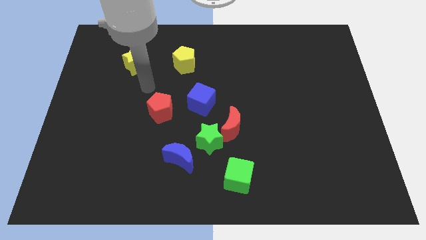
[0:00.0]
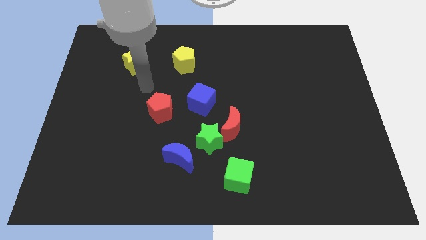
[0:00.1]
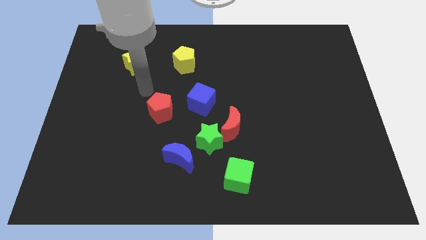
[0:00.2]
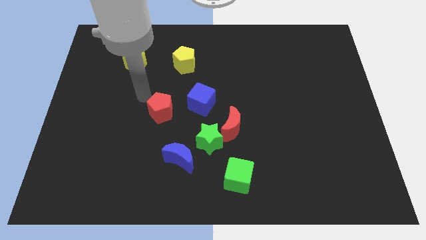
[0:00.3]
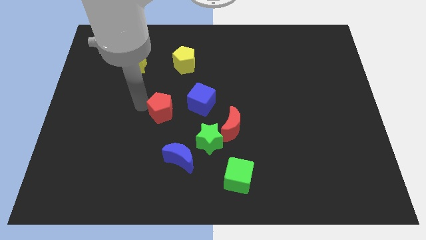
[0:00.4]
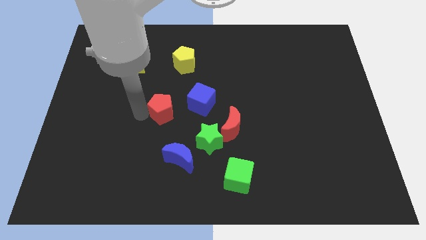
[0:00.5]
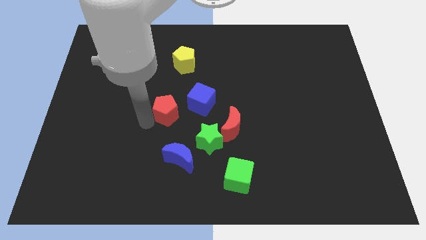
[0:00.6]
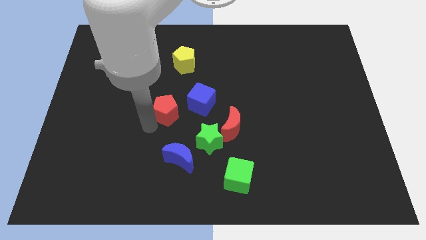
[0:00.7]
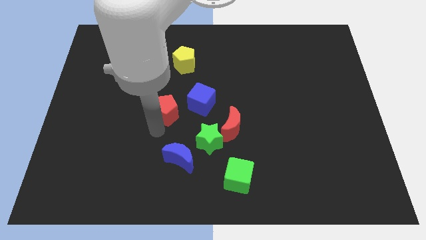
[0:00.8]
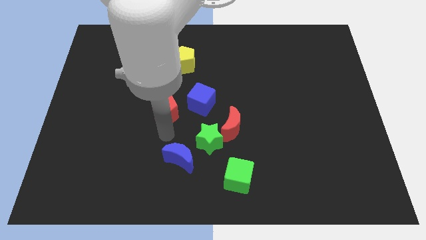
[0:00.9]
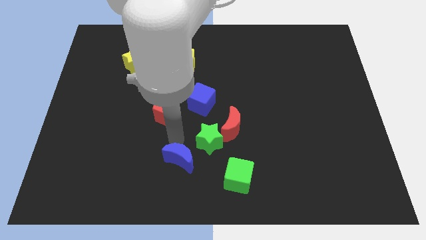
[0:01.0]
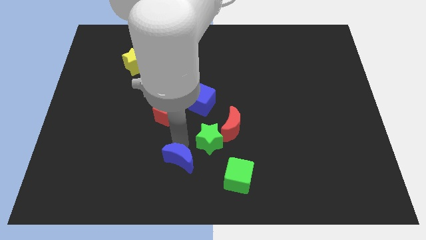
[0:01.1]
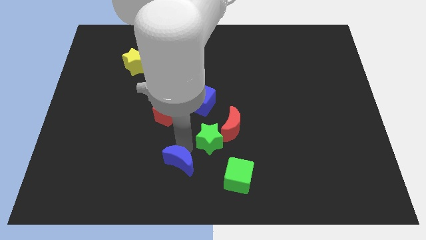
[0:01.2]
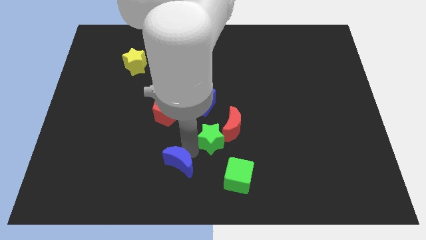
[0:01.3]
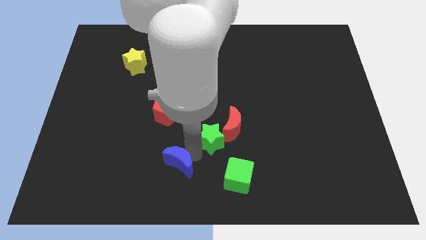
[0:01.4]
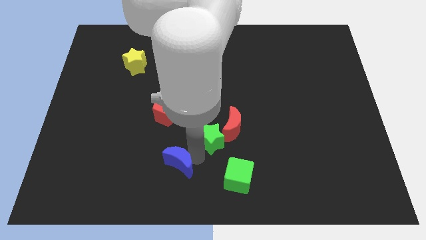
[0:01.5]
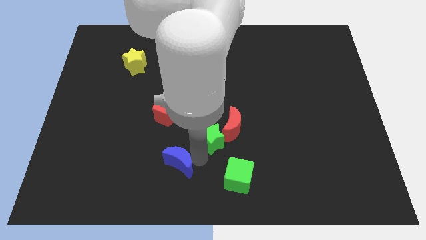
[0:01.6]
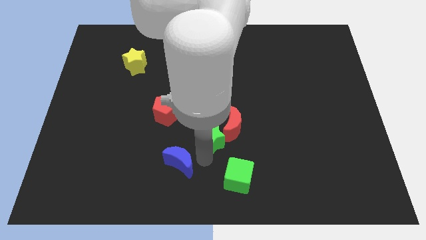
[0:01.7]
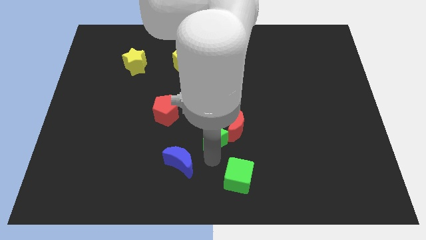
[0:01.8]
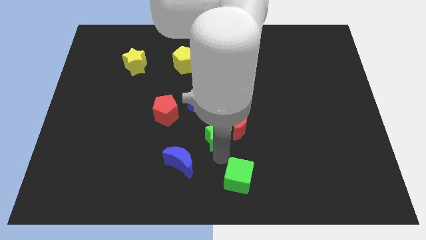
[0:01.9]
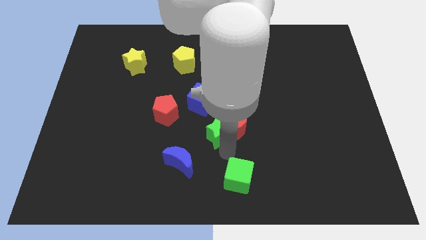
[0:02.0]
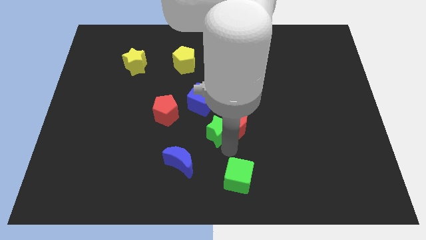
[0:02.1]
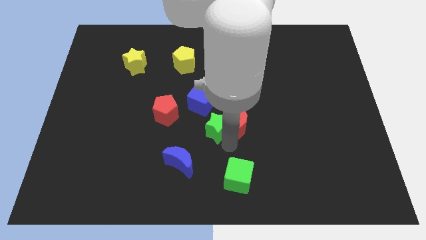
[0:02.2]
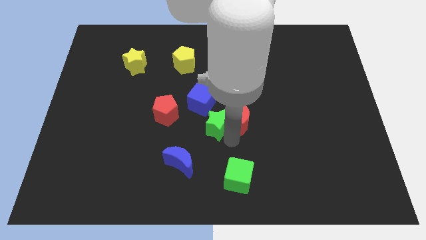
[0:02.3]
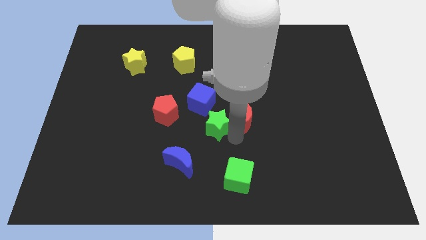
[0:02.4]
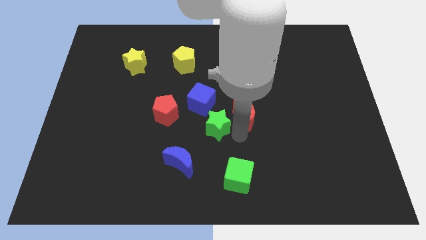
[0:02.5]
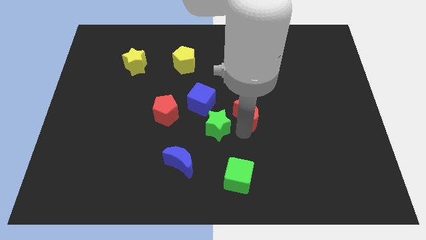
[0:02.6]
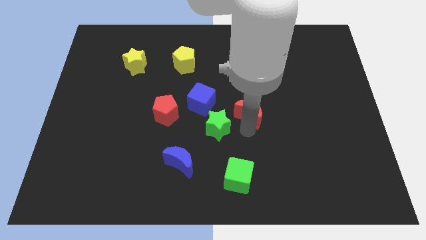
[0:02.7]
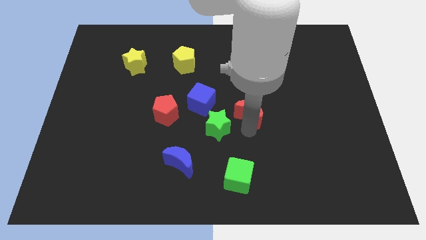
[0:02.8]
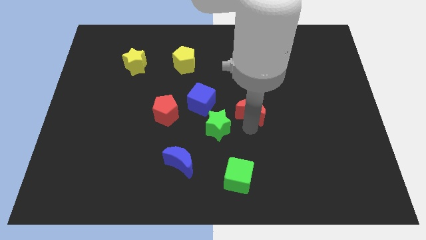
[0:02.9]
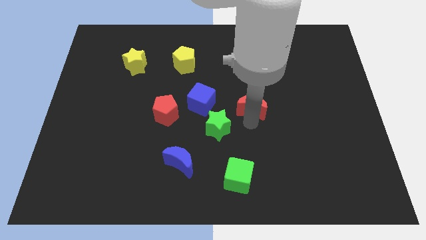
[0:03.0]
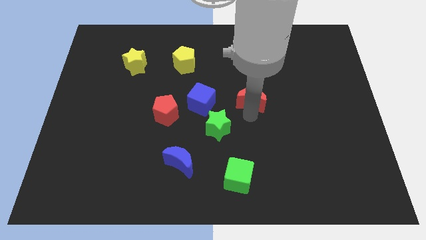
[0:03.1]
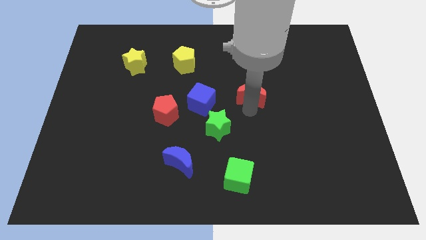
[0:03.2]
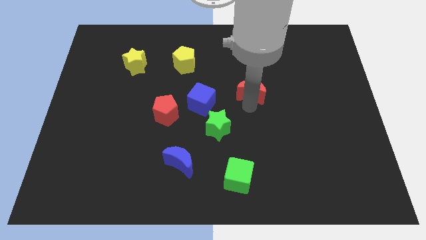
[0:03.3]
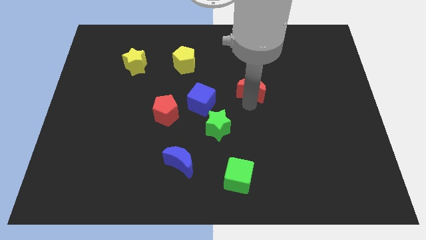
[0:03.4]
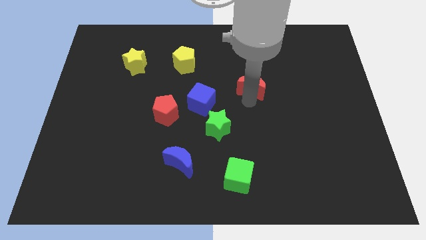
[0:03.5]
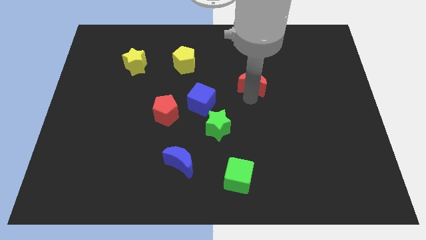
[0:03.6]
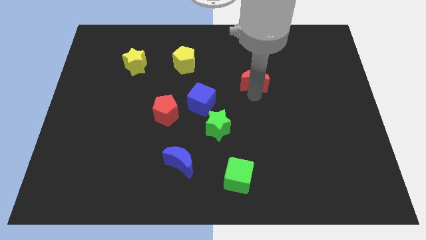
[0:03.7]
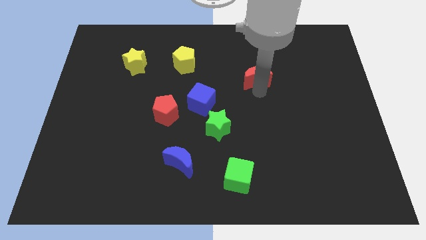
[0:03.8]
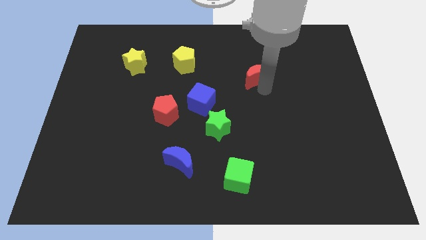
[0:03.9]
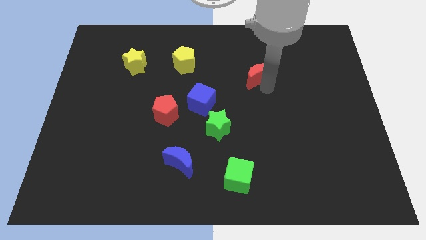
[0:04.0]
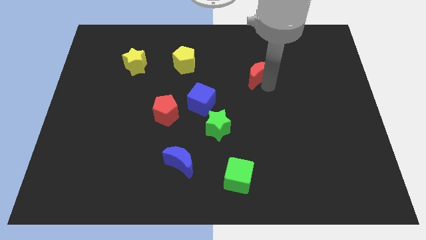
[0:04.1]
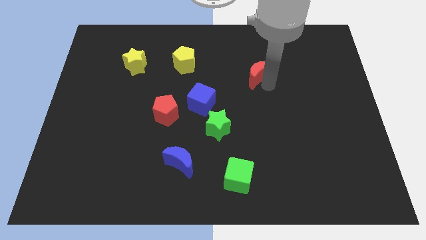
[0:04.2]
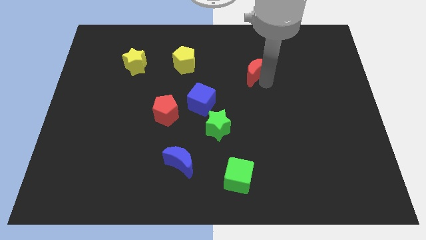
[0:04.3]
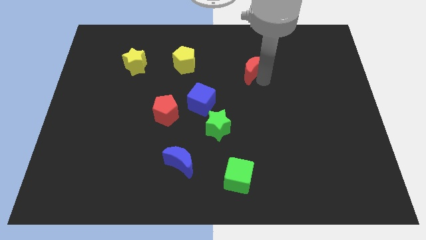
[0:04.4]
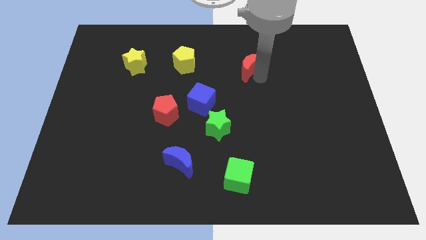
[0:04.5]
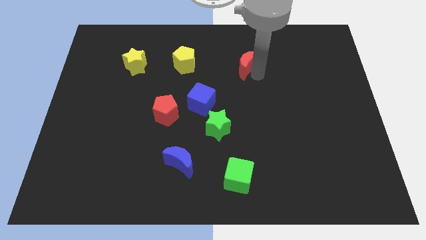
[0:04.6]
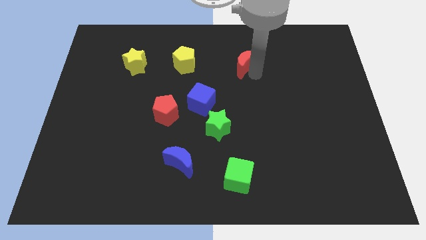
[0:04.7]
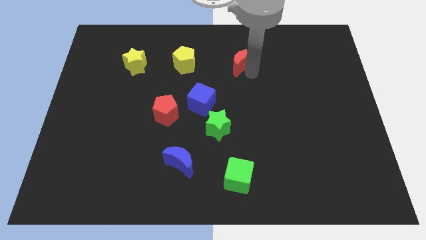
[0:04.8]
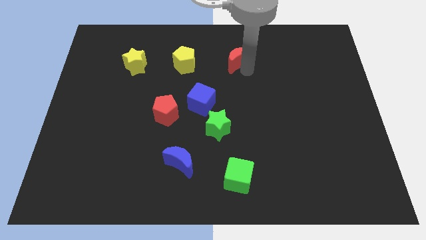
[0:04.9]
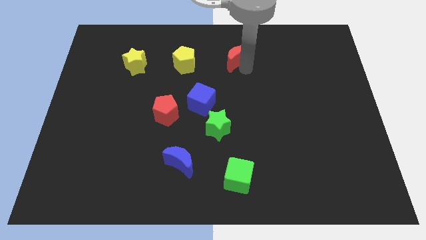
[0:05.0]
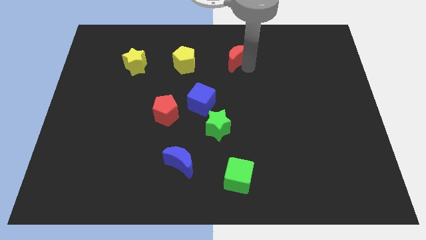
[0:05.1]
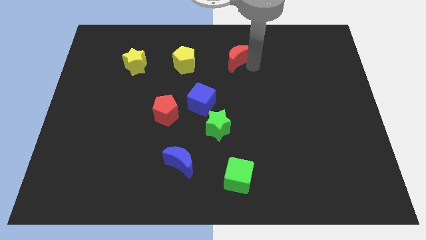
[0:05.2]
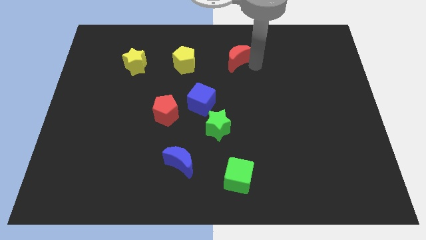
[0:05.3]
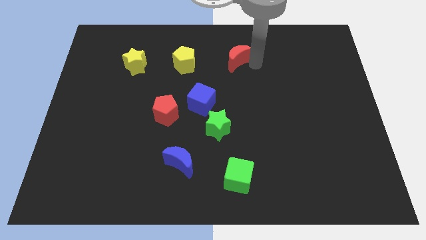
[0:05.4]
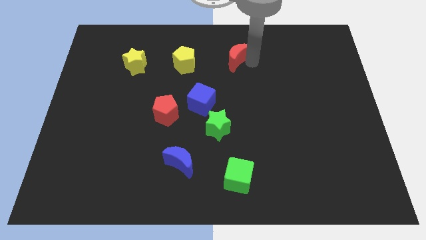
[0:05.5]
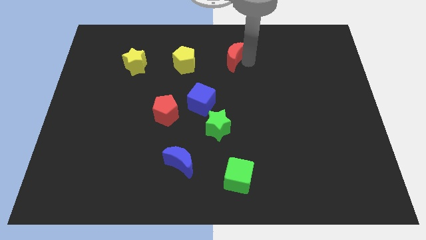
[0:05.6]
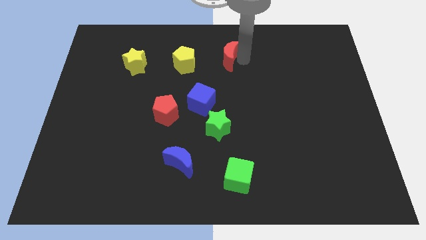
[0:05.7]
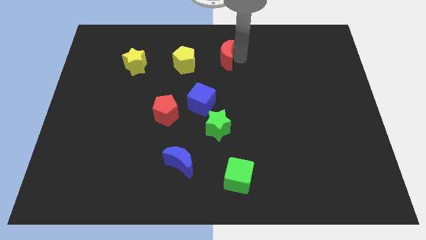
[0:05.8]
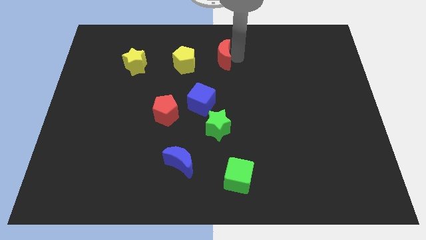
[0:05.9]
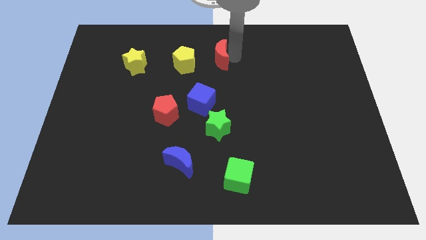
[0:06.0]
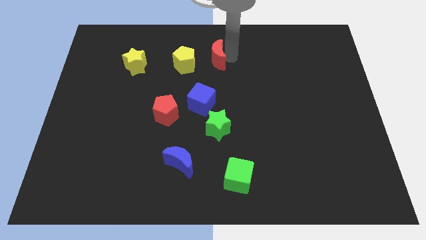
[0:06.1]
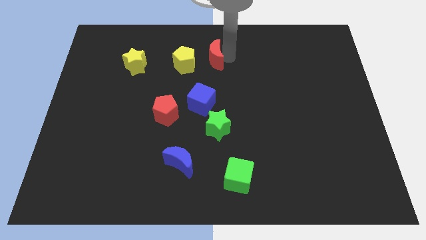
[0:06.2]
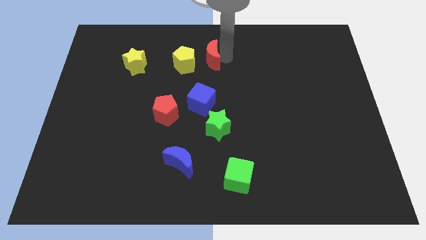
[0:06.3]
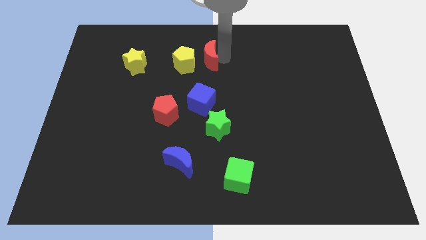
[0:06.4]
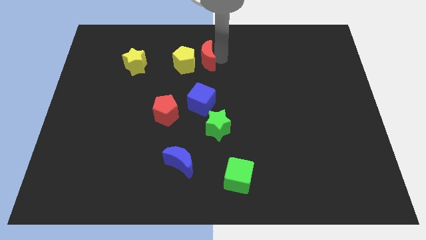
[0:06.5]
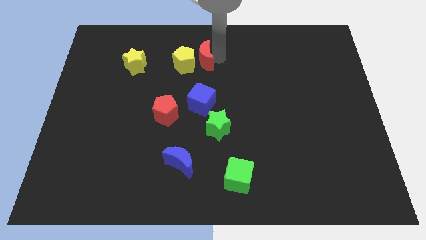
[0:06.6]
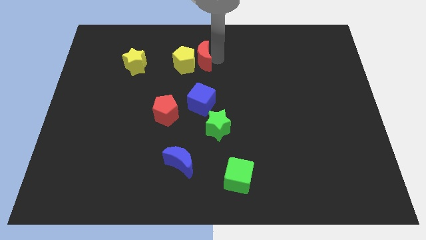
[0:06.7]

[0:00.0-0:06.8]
move the red moon to the yellow pentagon

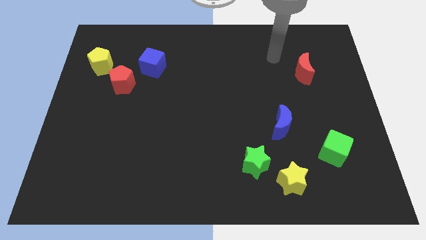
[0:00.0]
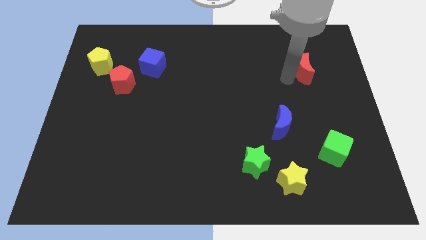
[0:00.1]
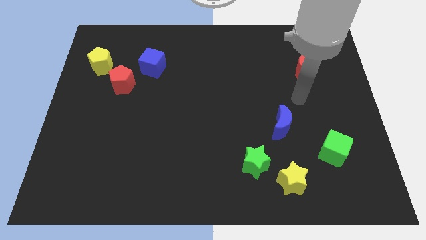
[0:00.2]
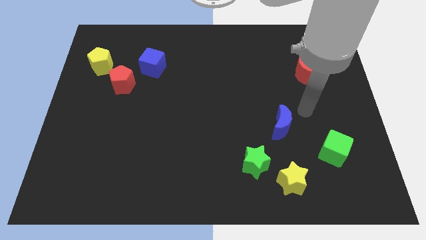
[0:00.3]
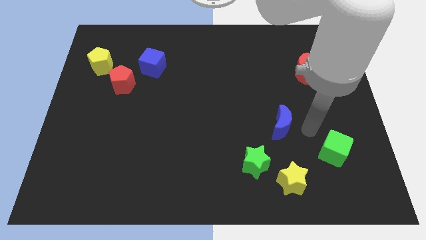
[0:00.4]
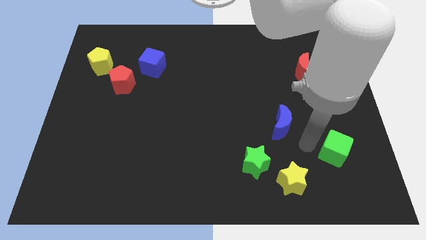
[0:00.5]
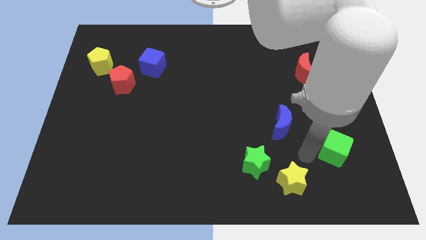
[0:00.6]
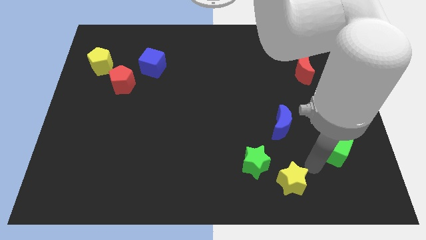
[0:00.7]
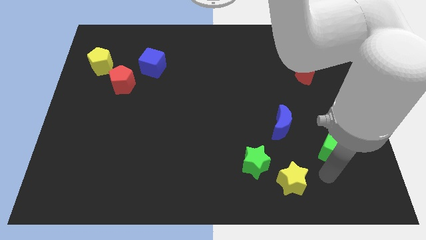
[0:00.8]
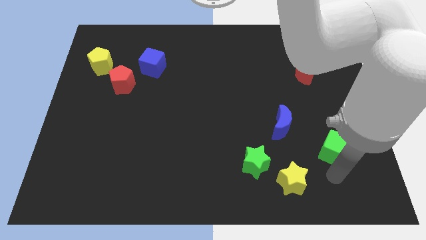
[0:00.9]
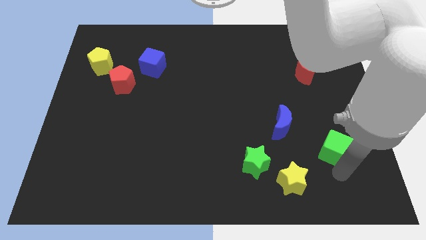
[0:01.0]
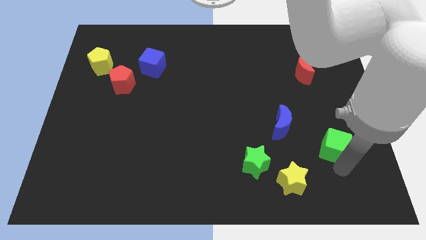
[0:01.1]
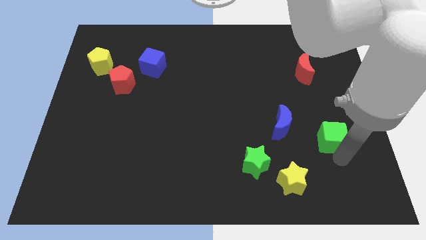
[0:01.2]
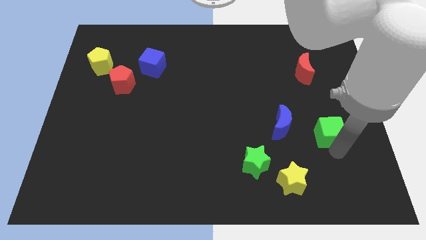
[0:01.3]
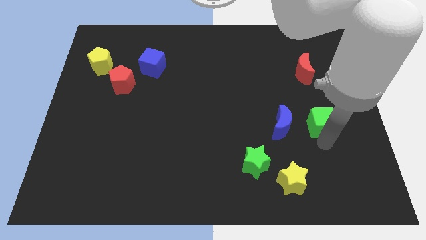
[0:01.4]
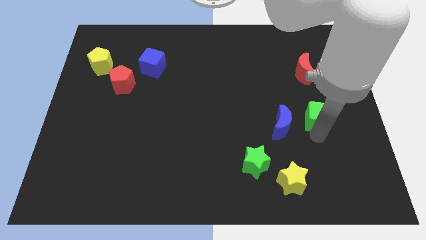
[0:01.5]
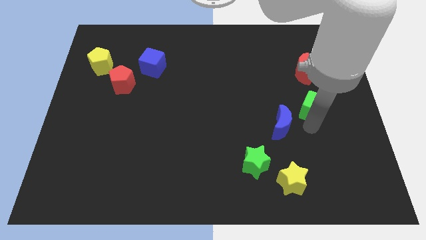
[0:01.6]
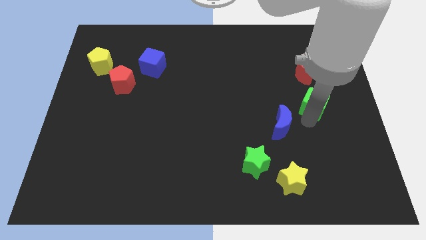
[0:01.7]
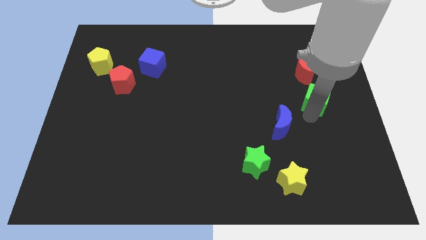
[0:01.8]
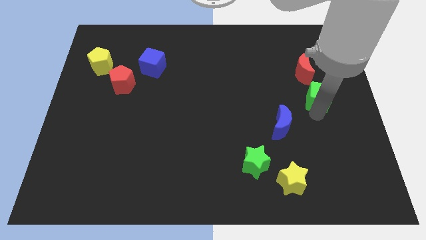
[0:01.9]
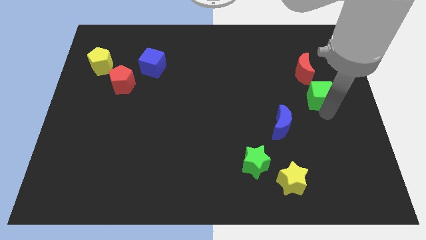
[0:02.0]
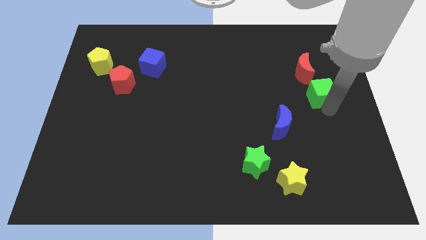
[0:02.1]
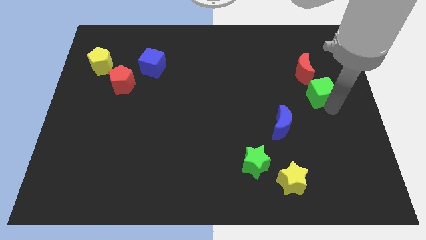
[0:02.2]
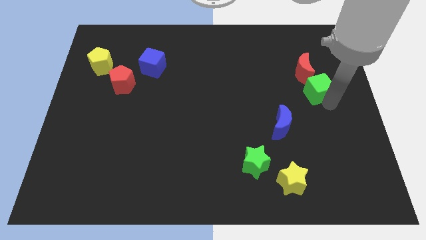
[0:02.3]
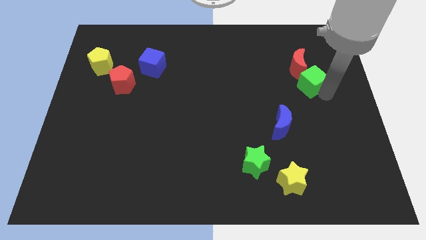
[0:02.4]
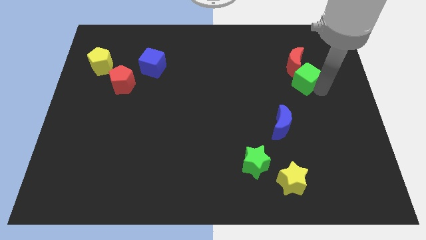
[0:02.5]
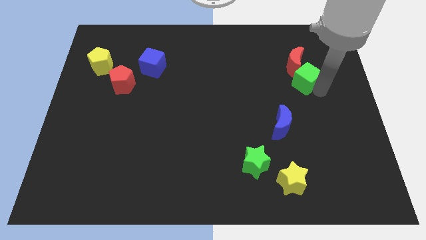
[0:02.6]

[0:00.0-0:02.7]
put the green cube towards the red moon
